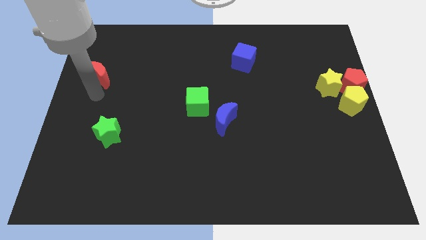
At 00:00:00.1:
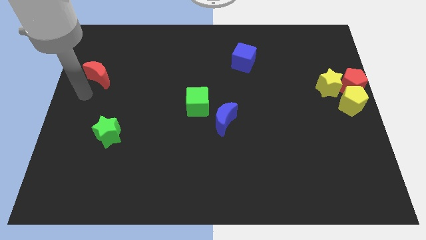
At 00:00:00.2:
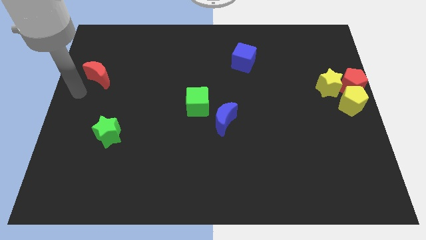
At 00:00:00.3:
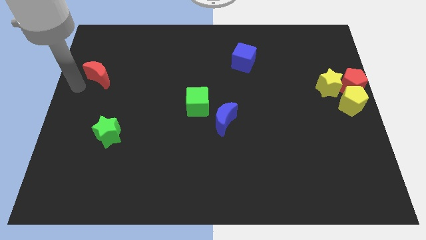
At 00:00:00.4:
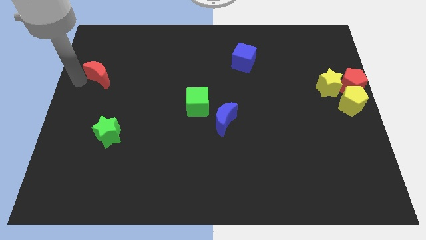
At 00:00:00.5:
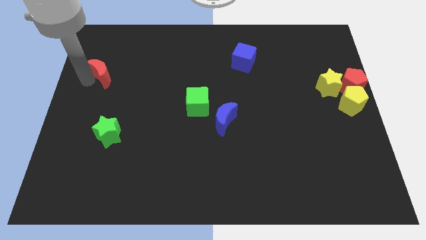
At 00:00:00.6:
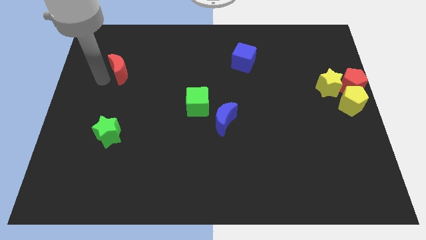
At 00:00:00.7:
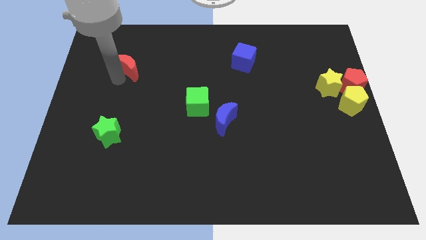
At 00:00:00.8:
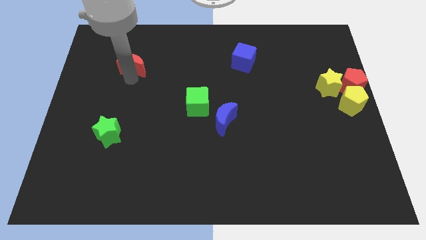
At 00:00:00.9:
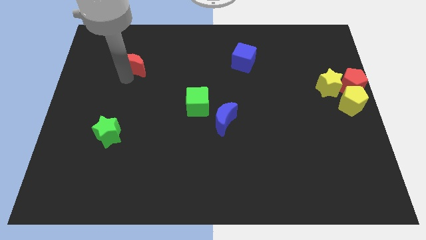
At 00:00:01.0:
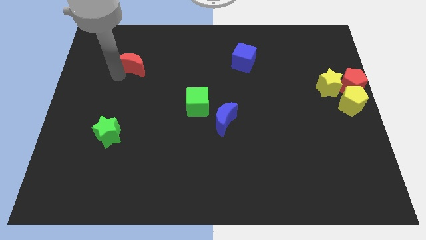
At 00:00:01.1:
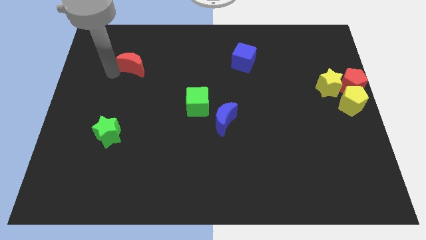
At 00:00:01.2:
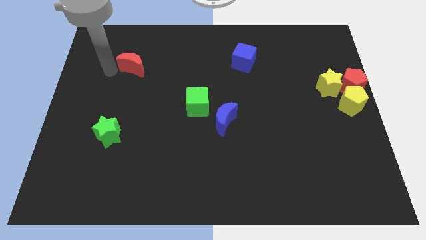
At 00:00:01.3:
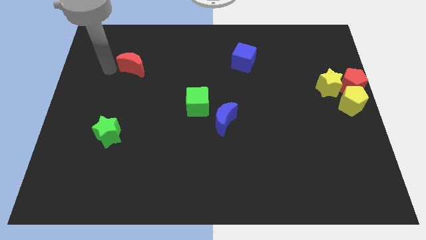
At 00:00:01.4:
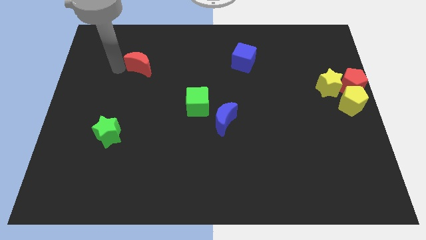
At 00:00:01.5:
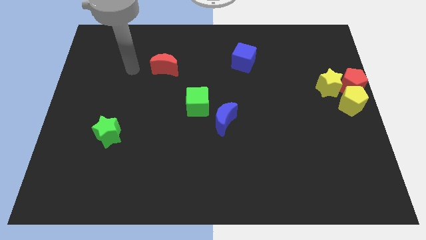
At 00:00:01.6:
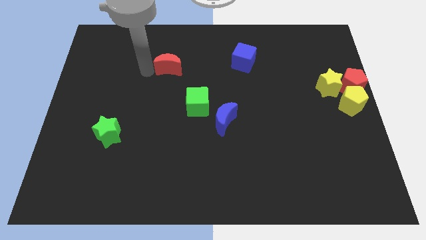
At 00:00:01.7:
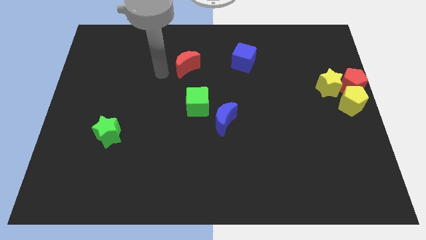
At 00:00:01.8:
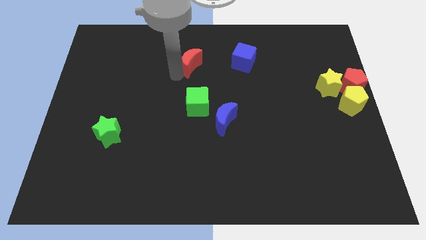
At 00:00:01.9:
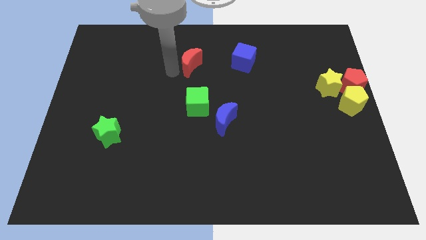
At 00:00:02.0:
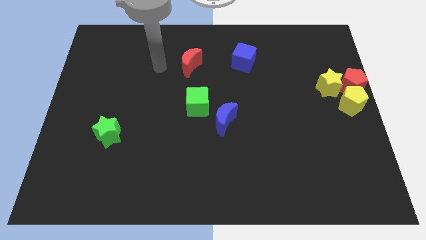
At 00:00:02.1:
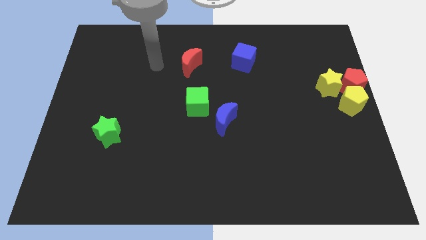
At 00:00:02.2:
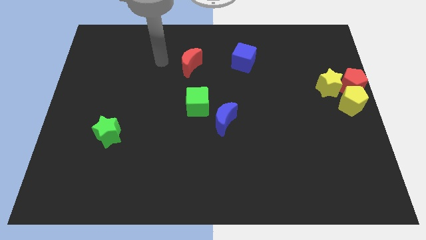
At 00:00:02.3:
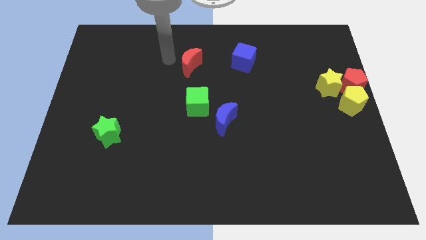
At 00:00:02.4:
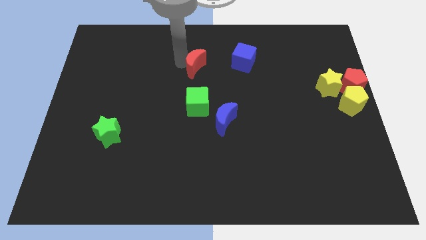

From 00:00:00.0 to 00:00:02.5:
push red pentagon above green cube

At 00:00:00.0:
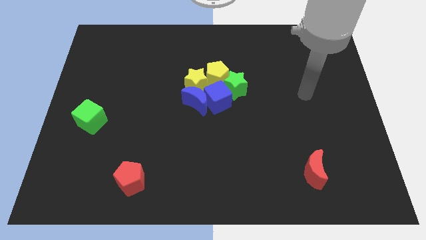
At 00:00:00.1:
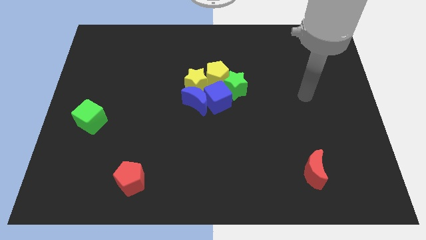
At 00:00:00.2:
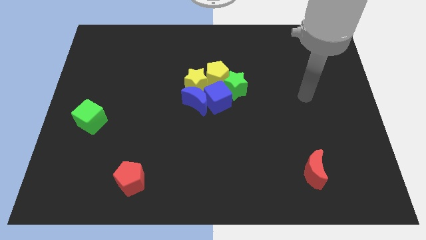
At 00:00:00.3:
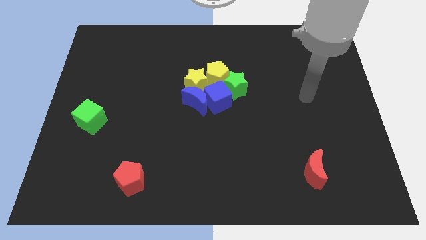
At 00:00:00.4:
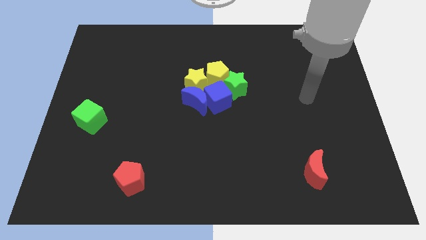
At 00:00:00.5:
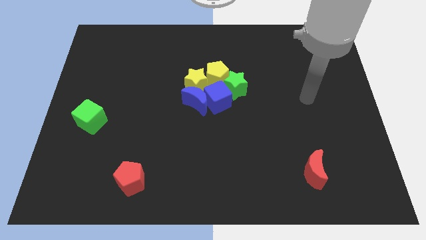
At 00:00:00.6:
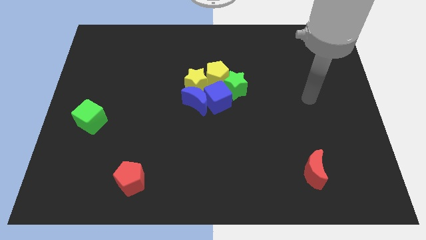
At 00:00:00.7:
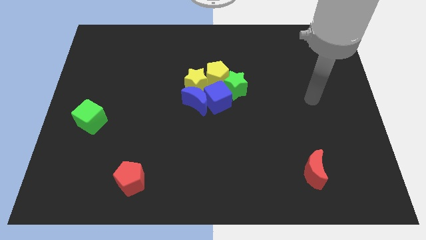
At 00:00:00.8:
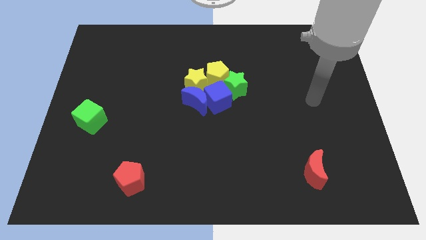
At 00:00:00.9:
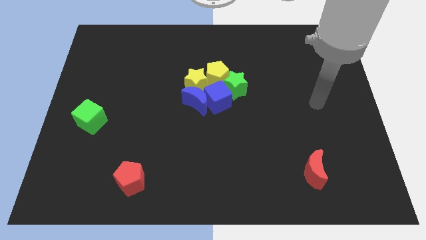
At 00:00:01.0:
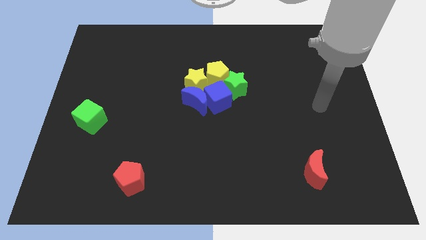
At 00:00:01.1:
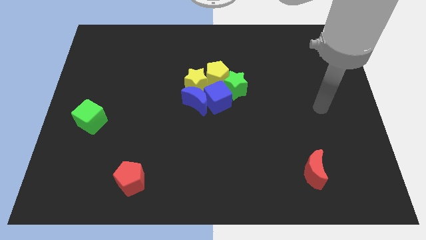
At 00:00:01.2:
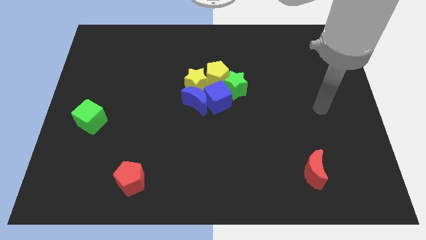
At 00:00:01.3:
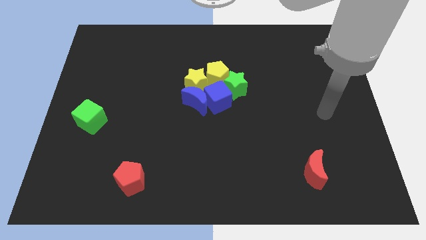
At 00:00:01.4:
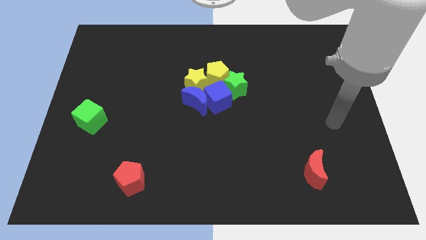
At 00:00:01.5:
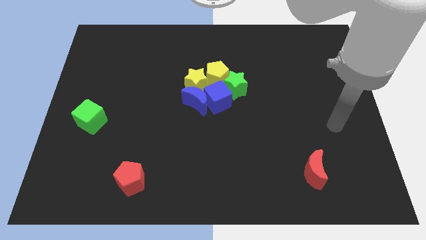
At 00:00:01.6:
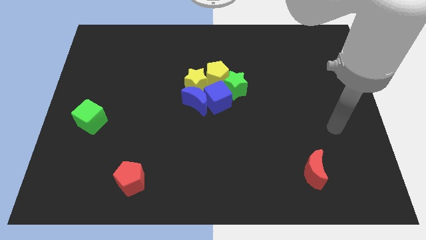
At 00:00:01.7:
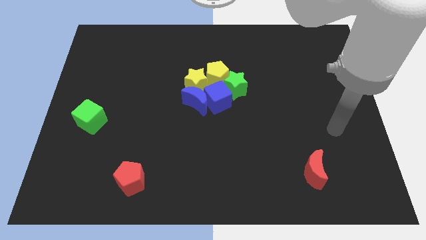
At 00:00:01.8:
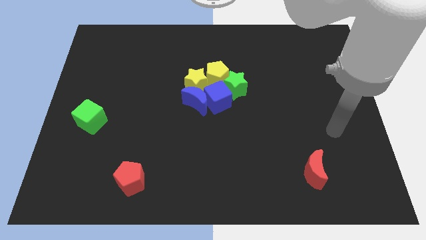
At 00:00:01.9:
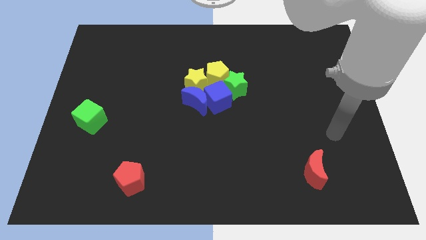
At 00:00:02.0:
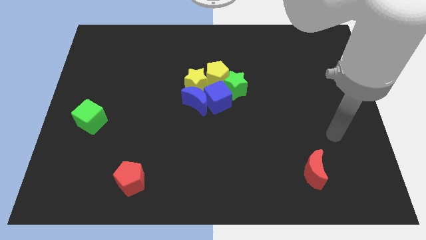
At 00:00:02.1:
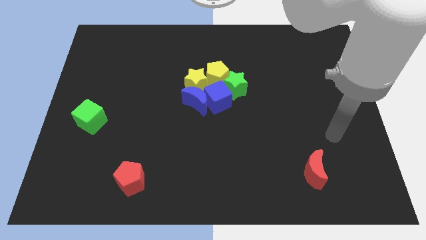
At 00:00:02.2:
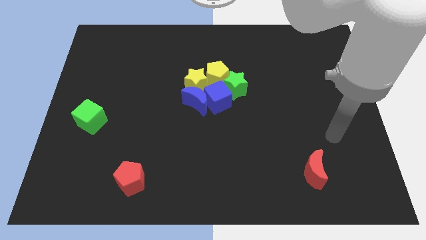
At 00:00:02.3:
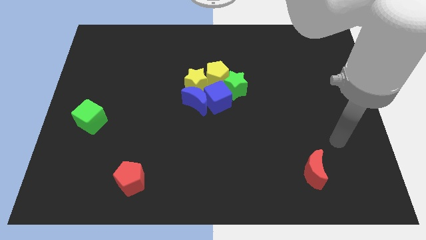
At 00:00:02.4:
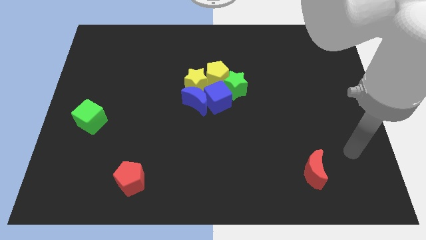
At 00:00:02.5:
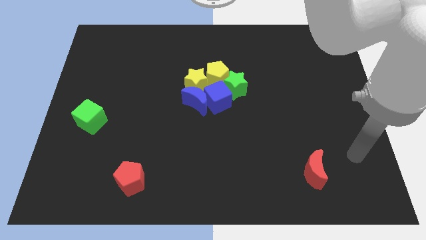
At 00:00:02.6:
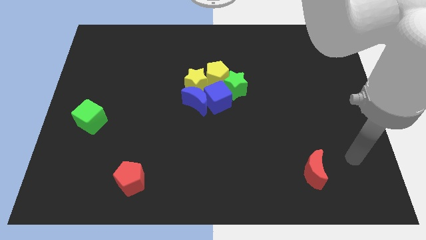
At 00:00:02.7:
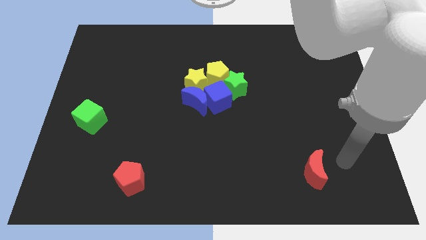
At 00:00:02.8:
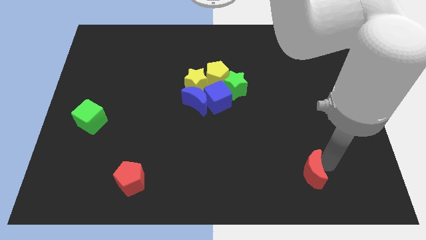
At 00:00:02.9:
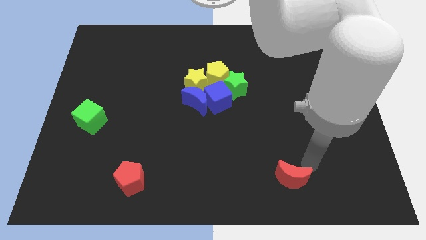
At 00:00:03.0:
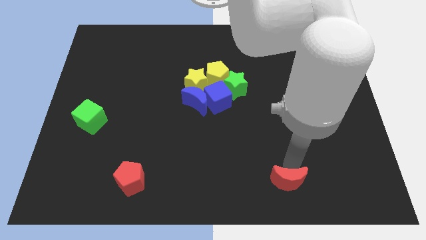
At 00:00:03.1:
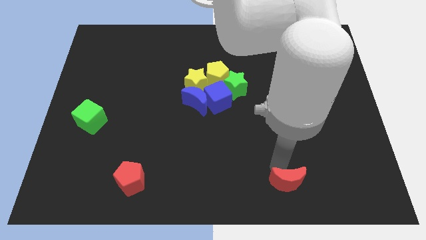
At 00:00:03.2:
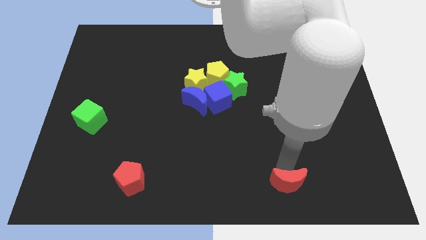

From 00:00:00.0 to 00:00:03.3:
move the red moon slightly down

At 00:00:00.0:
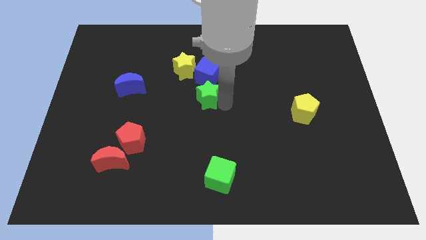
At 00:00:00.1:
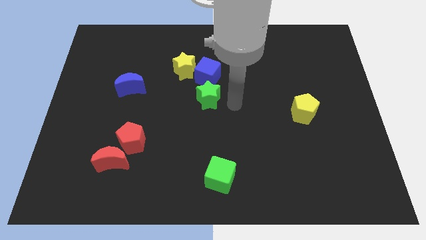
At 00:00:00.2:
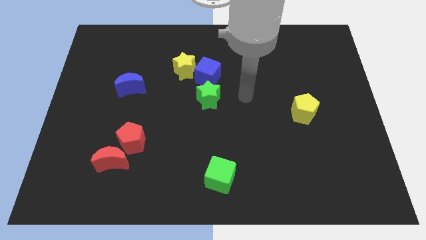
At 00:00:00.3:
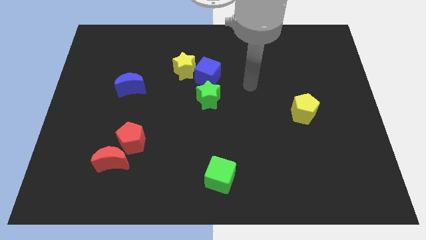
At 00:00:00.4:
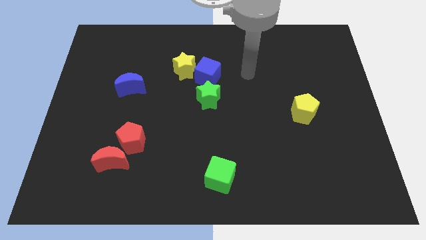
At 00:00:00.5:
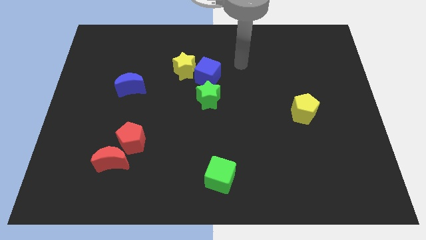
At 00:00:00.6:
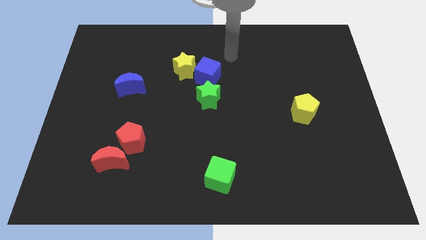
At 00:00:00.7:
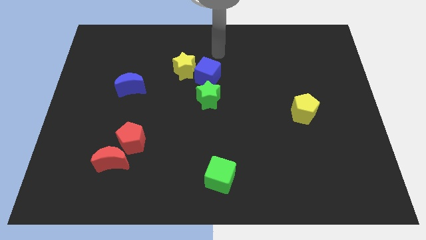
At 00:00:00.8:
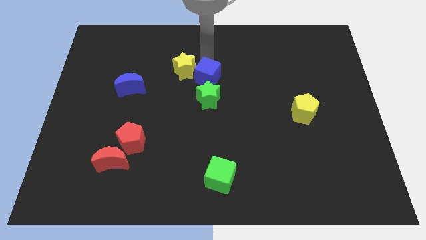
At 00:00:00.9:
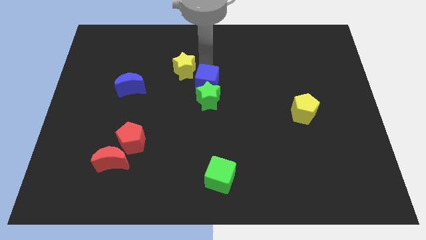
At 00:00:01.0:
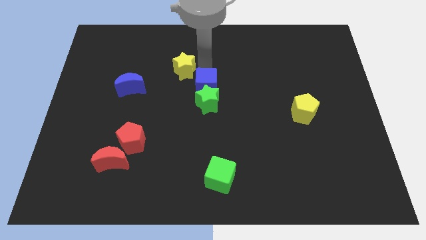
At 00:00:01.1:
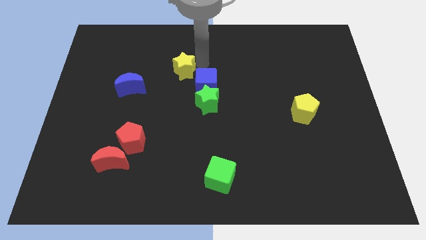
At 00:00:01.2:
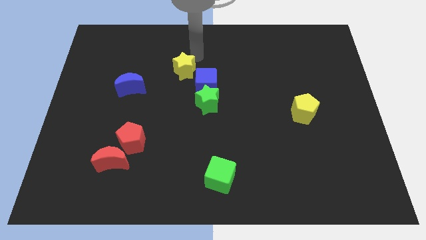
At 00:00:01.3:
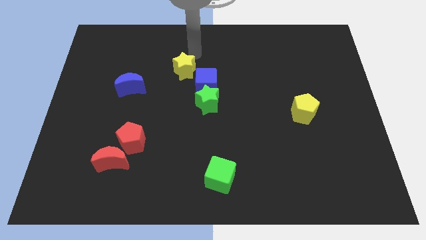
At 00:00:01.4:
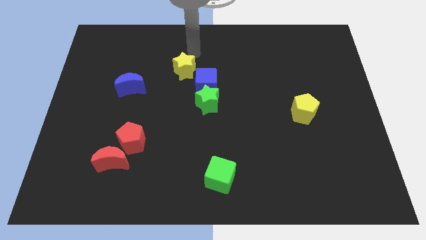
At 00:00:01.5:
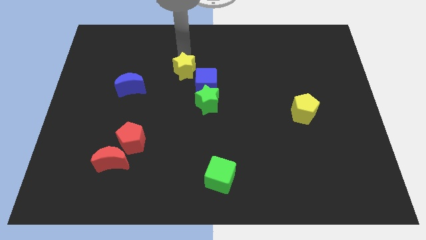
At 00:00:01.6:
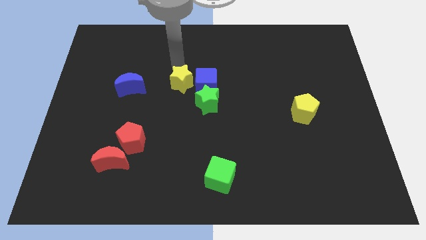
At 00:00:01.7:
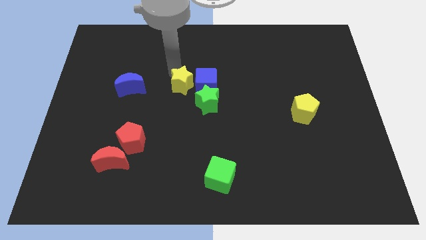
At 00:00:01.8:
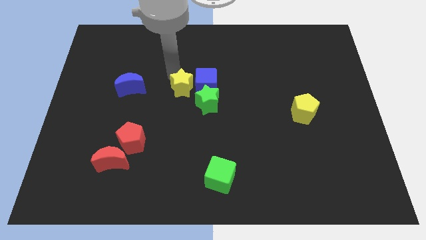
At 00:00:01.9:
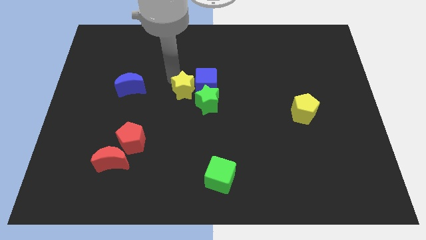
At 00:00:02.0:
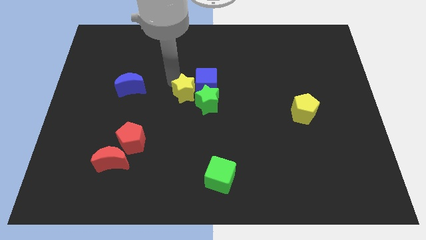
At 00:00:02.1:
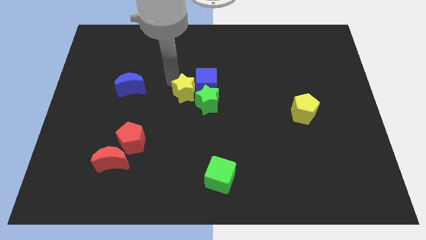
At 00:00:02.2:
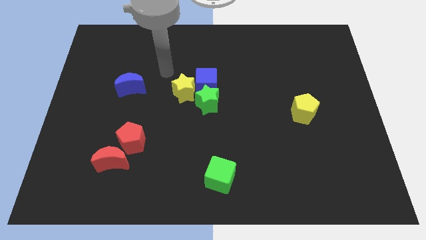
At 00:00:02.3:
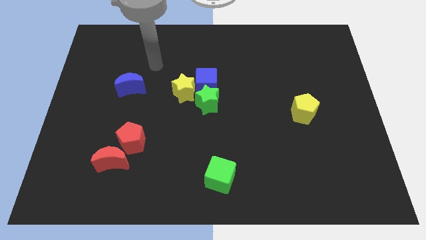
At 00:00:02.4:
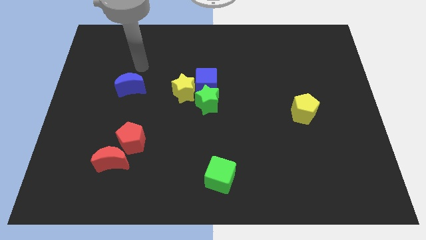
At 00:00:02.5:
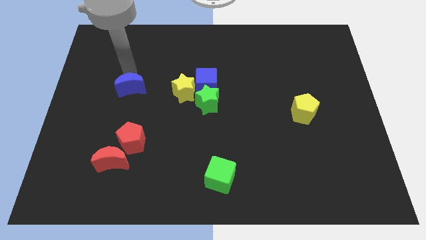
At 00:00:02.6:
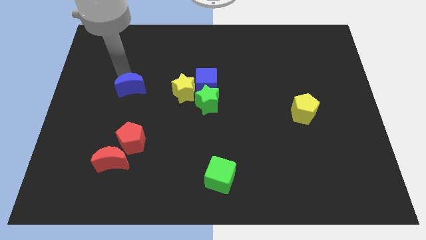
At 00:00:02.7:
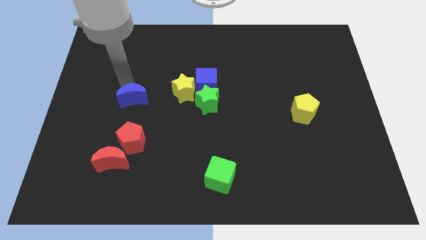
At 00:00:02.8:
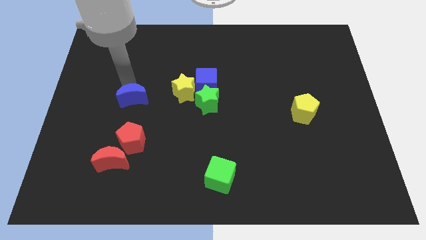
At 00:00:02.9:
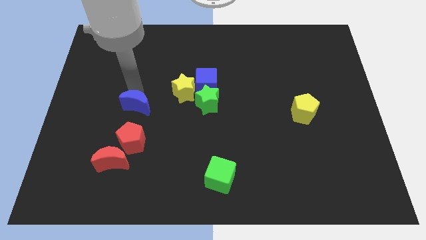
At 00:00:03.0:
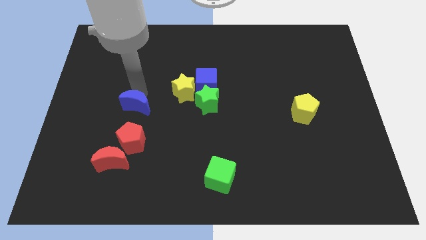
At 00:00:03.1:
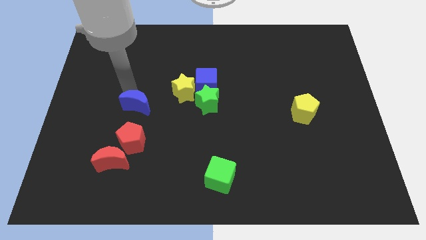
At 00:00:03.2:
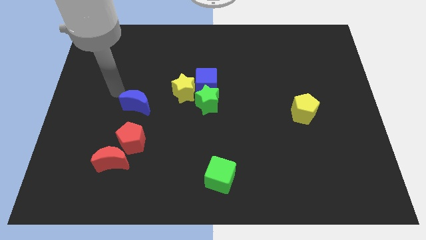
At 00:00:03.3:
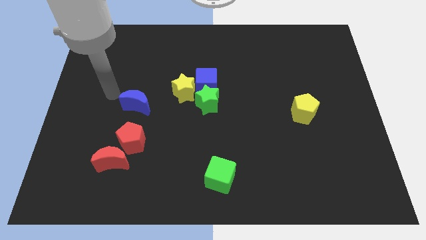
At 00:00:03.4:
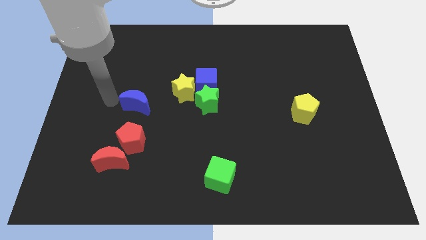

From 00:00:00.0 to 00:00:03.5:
move your arm away from the green star
